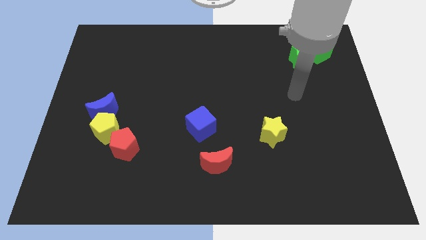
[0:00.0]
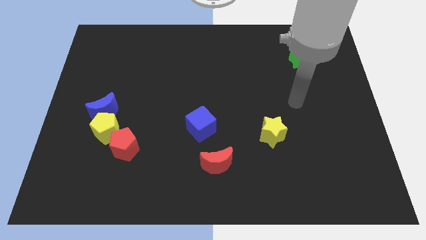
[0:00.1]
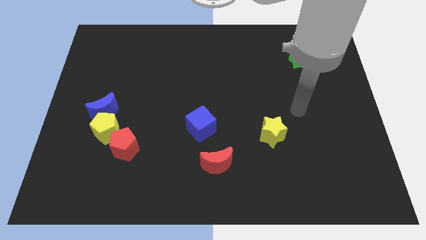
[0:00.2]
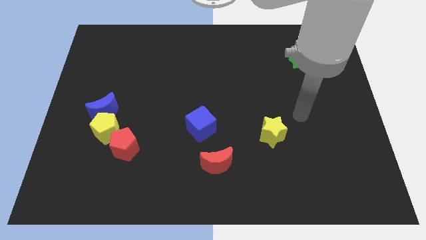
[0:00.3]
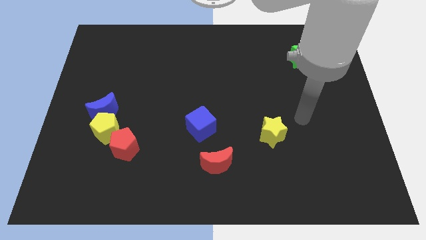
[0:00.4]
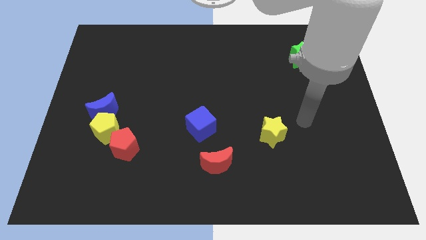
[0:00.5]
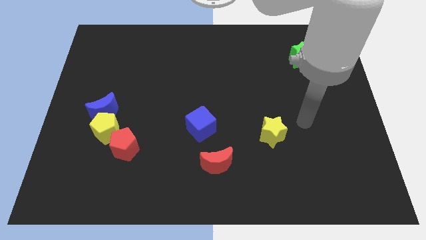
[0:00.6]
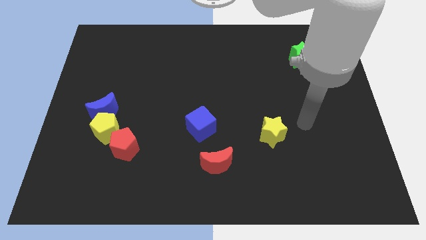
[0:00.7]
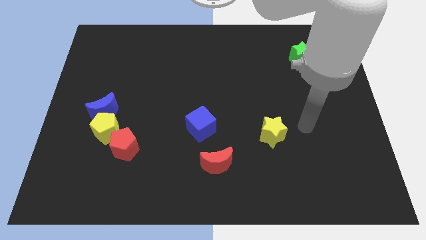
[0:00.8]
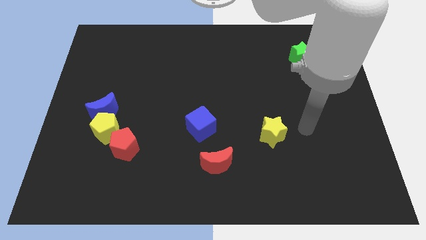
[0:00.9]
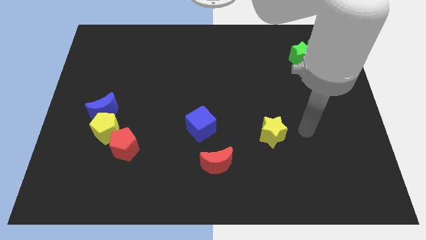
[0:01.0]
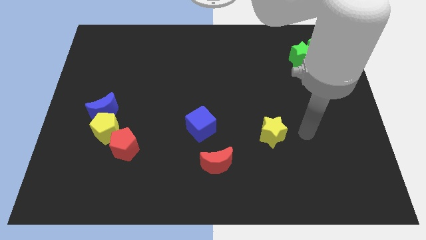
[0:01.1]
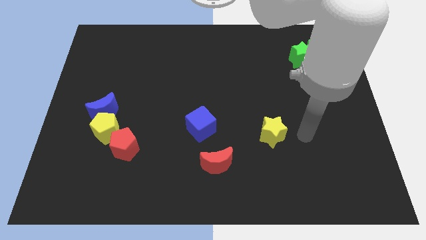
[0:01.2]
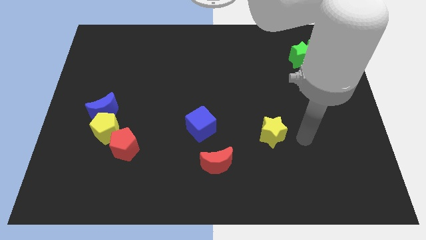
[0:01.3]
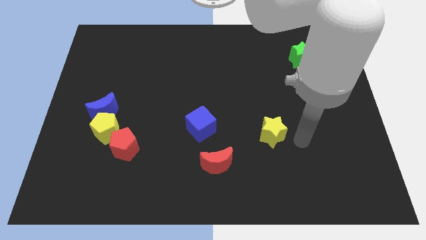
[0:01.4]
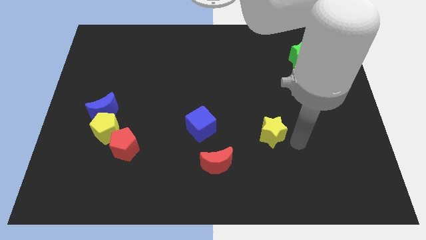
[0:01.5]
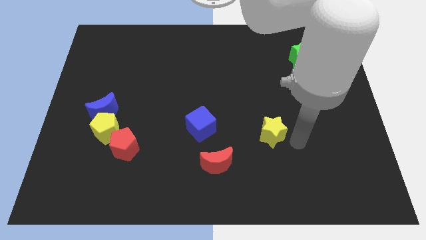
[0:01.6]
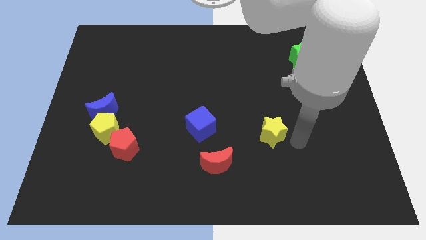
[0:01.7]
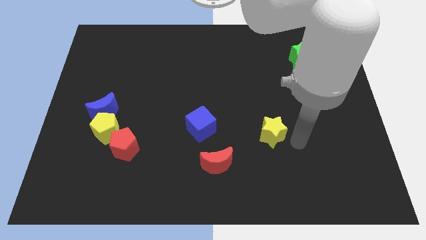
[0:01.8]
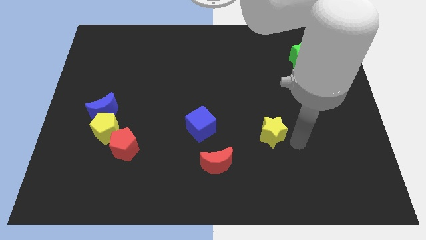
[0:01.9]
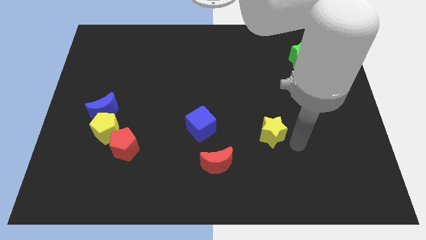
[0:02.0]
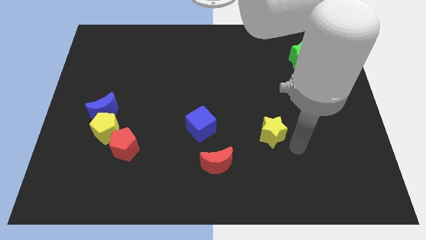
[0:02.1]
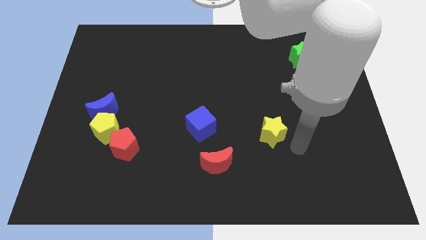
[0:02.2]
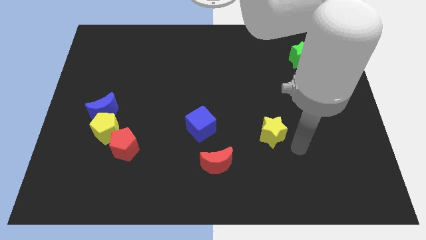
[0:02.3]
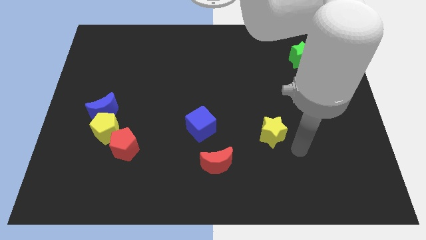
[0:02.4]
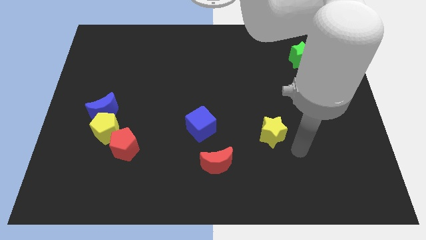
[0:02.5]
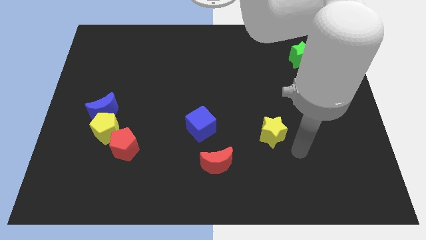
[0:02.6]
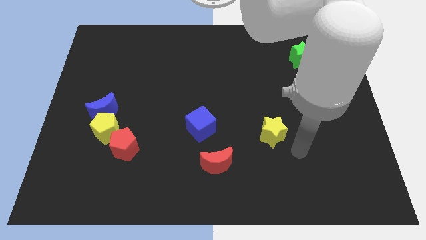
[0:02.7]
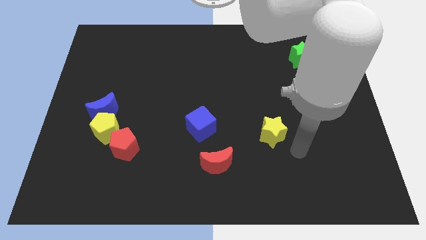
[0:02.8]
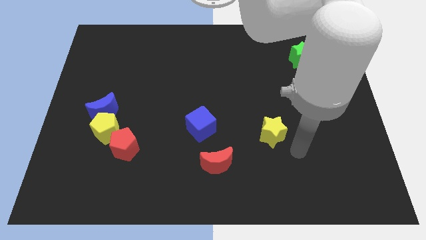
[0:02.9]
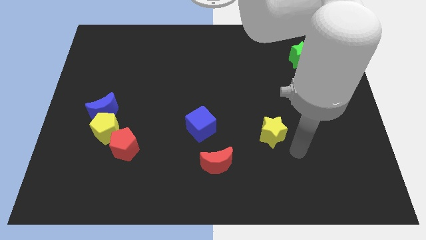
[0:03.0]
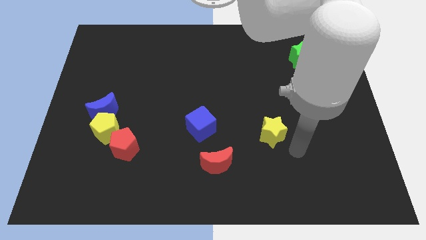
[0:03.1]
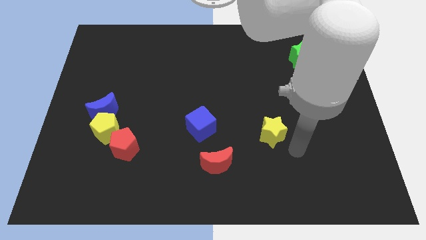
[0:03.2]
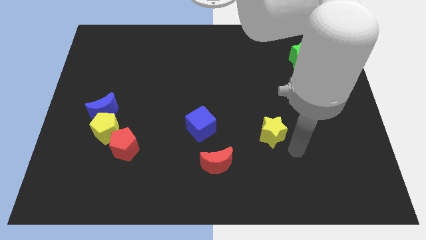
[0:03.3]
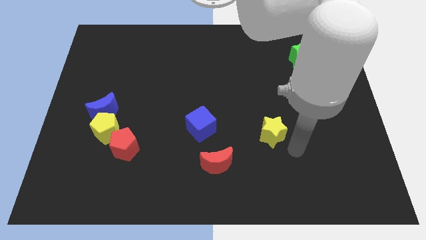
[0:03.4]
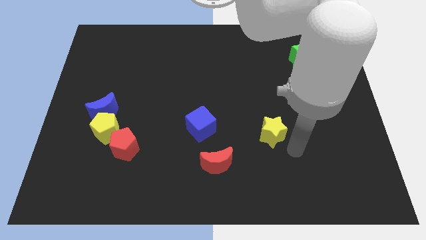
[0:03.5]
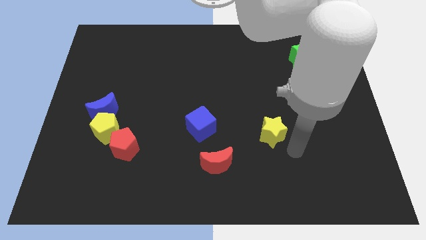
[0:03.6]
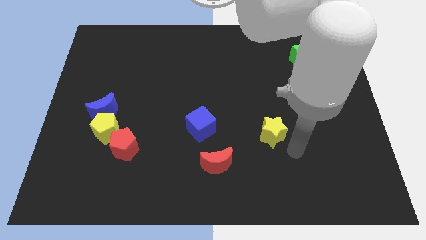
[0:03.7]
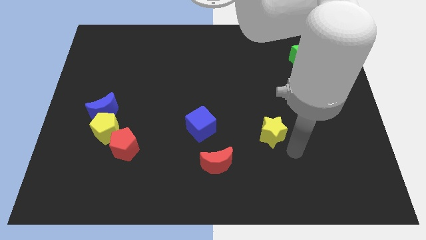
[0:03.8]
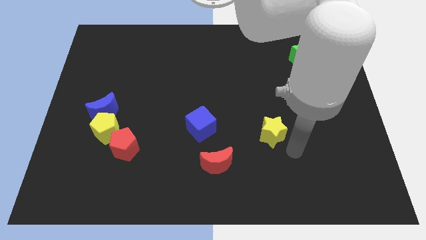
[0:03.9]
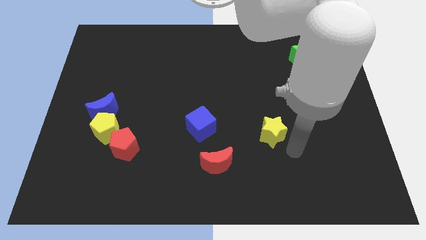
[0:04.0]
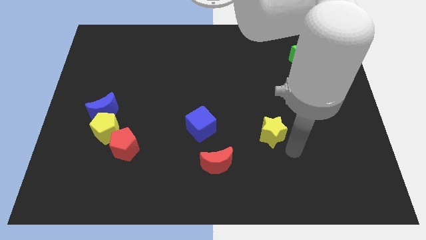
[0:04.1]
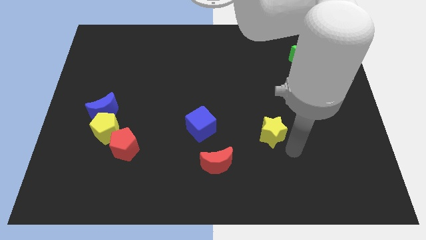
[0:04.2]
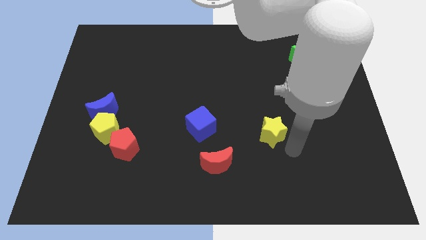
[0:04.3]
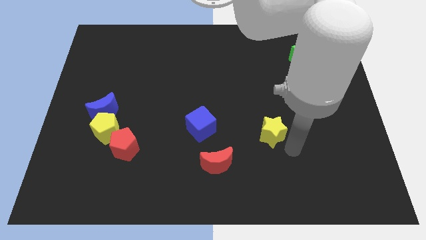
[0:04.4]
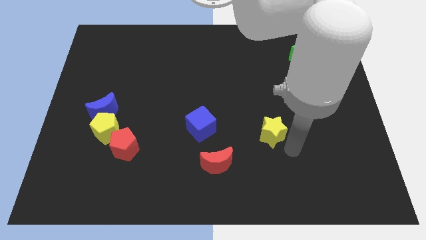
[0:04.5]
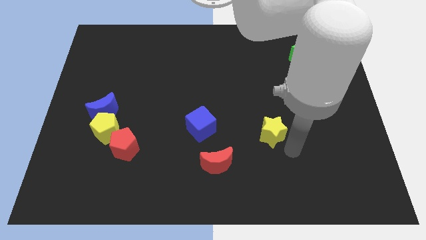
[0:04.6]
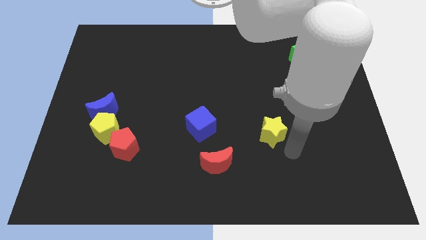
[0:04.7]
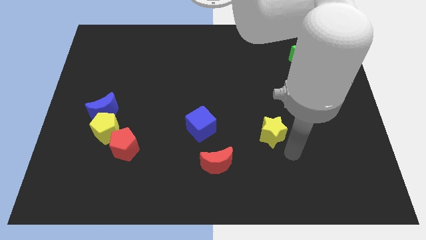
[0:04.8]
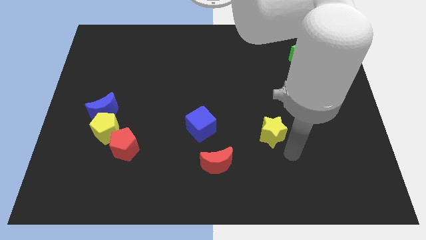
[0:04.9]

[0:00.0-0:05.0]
move your arm towards the yellow star

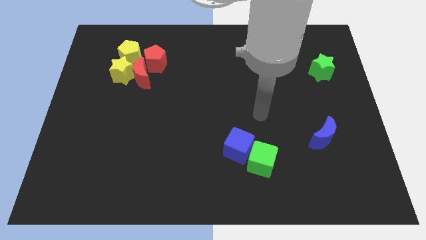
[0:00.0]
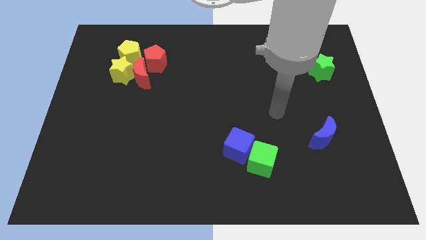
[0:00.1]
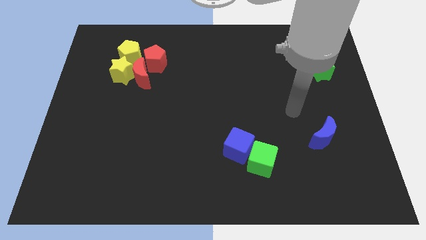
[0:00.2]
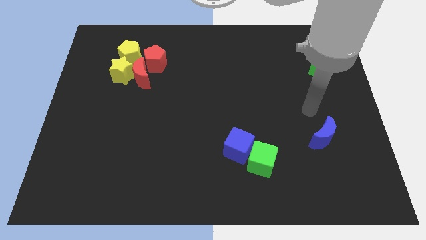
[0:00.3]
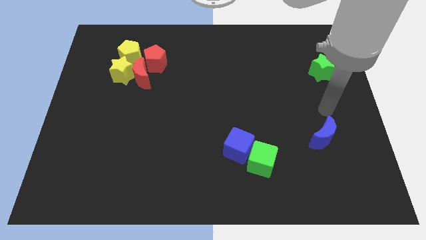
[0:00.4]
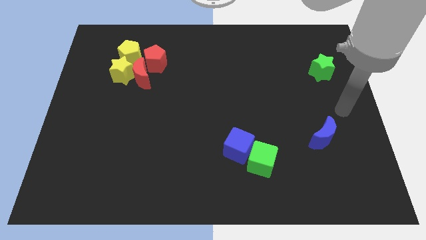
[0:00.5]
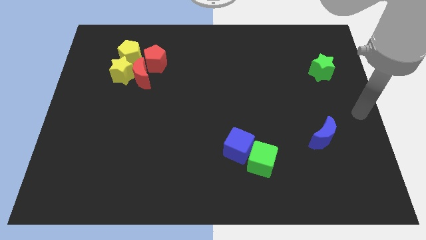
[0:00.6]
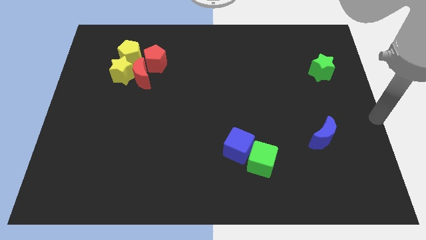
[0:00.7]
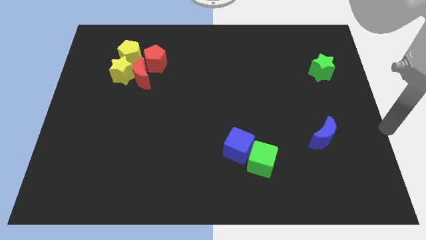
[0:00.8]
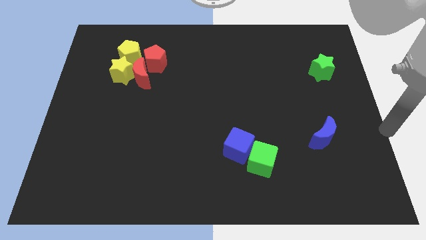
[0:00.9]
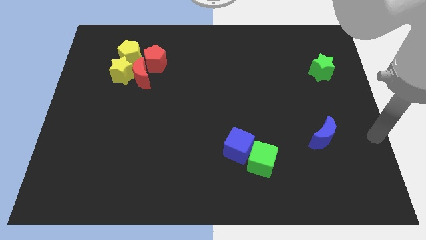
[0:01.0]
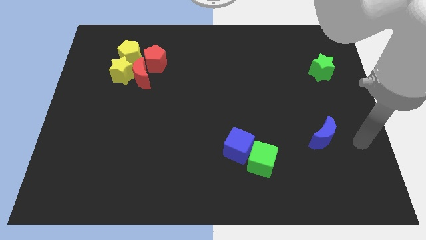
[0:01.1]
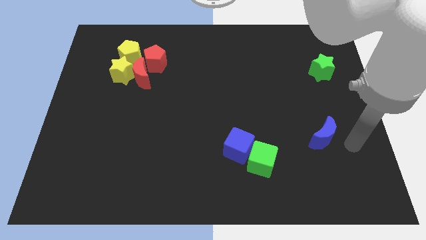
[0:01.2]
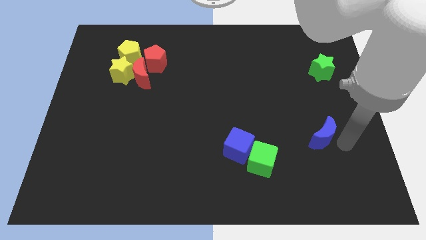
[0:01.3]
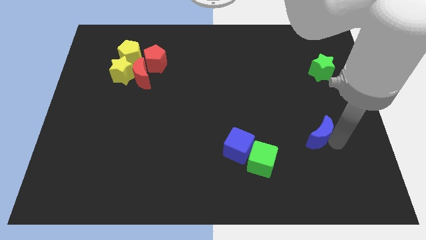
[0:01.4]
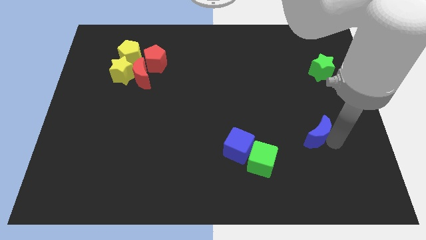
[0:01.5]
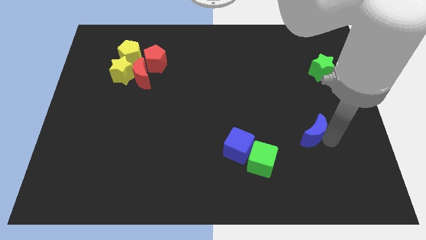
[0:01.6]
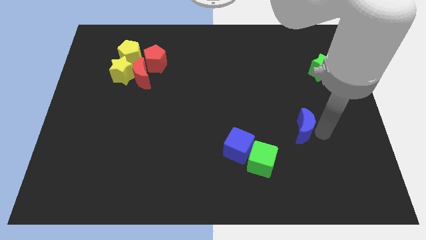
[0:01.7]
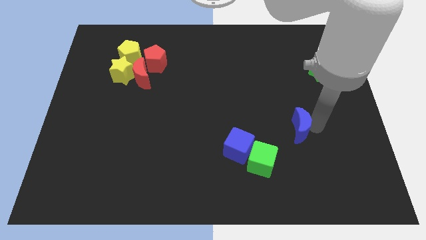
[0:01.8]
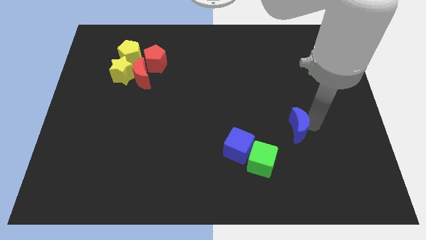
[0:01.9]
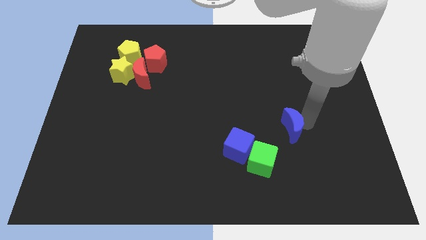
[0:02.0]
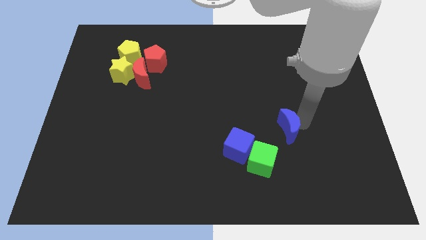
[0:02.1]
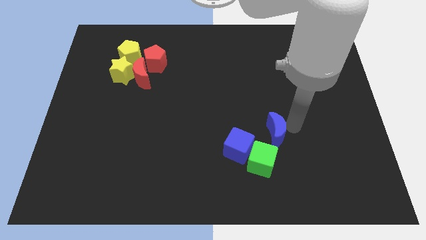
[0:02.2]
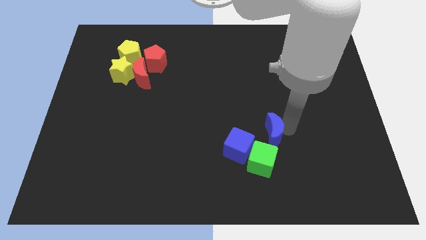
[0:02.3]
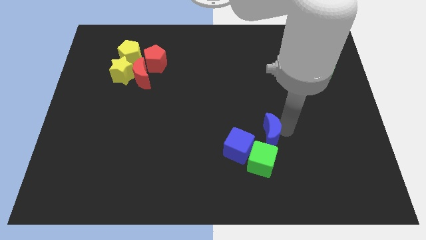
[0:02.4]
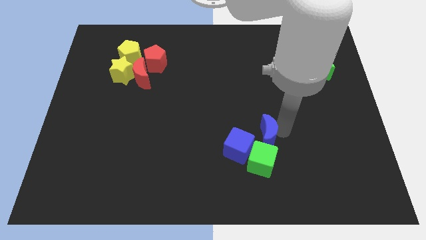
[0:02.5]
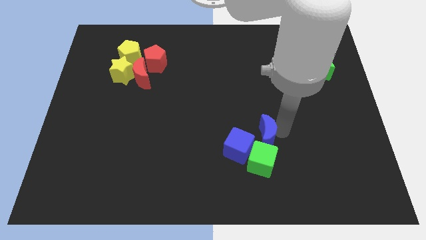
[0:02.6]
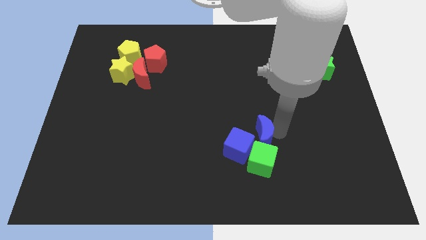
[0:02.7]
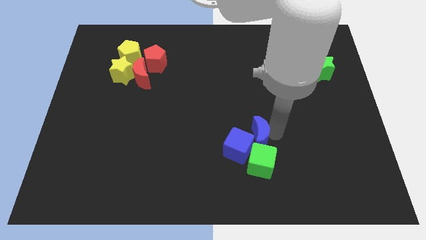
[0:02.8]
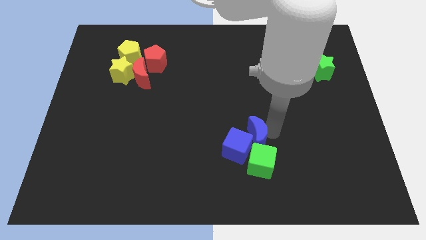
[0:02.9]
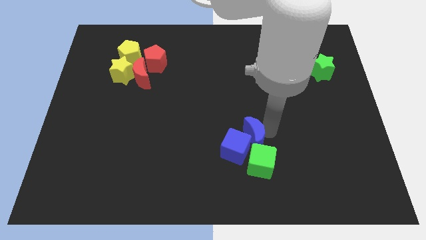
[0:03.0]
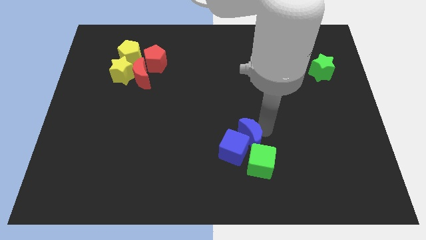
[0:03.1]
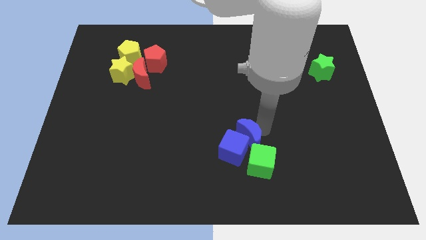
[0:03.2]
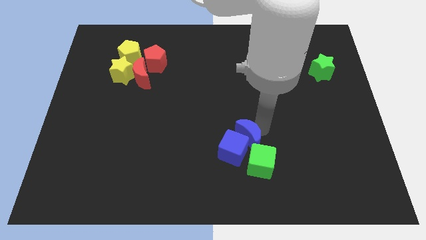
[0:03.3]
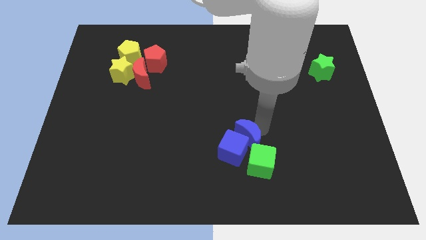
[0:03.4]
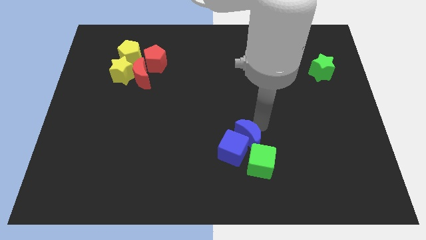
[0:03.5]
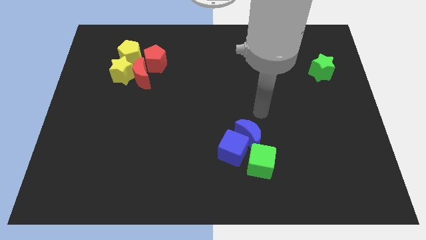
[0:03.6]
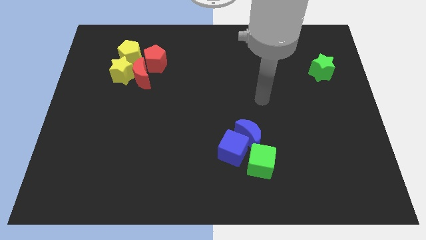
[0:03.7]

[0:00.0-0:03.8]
move the blue crescent to the top of the blue cube

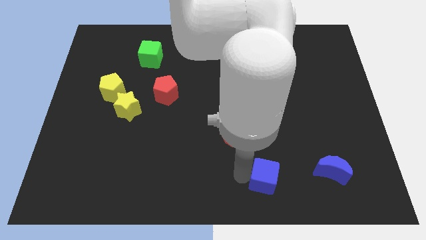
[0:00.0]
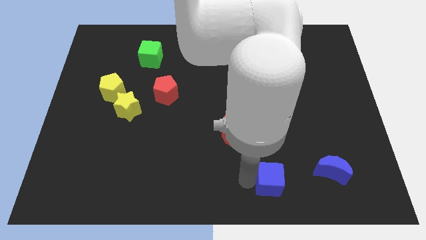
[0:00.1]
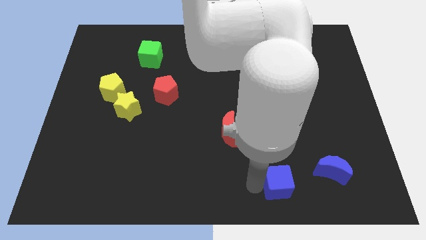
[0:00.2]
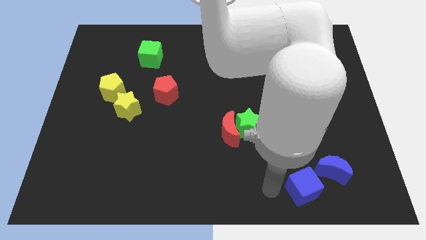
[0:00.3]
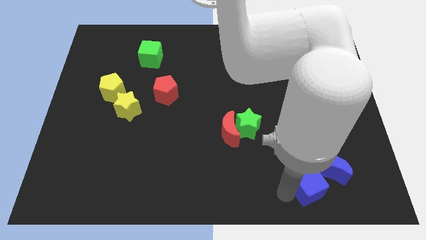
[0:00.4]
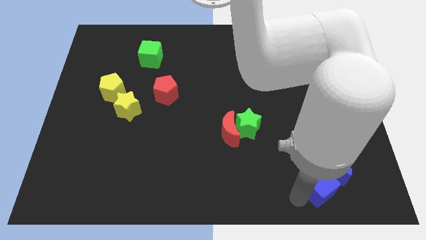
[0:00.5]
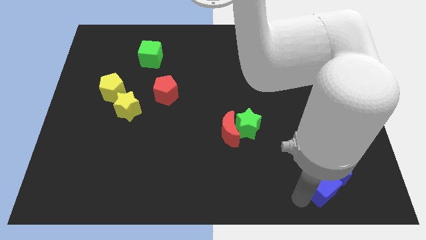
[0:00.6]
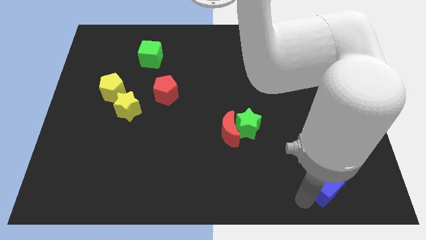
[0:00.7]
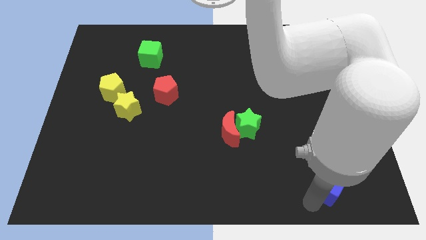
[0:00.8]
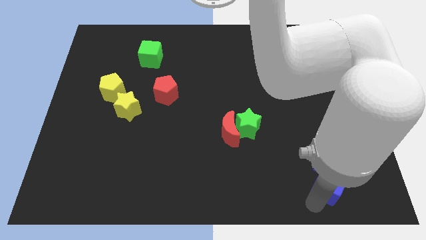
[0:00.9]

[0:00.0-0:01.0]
place blue cube close to blue crescent
